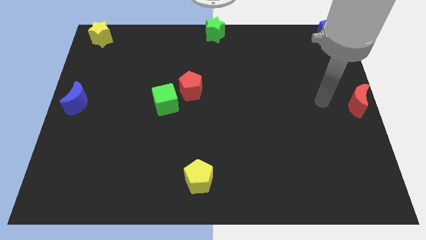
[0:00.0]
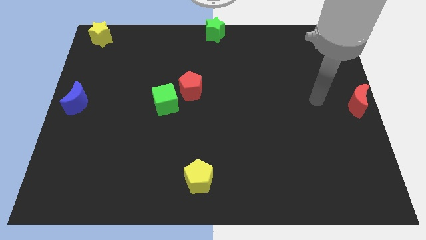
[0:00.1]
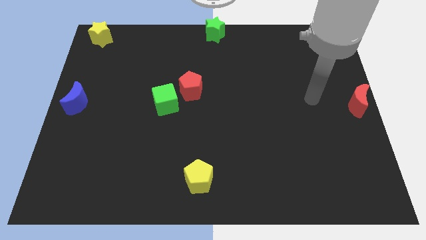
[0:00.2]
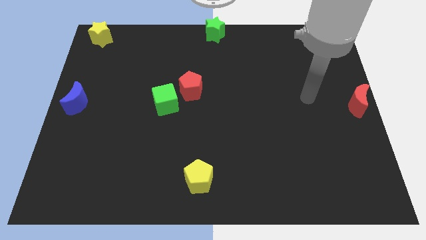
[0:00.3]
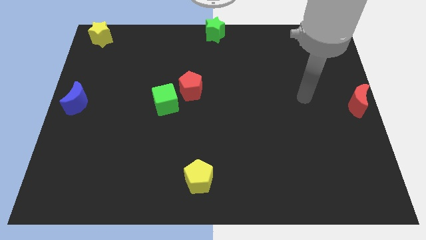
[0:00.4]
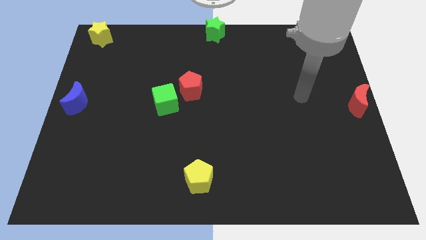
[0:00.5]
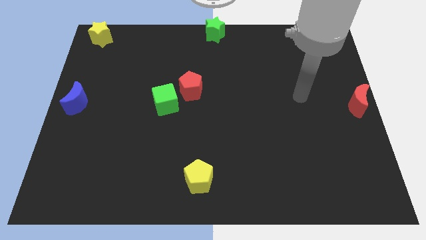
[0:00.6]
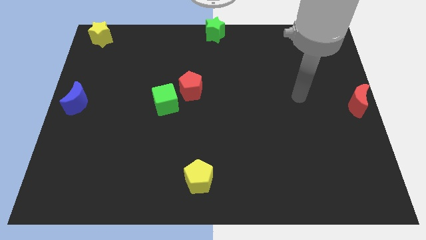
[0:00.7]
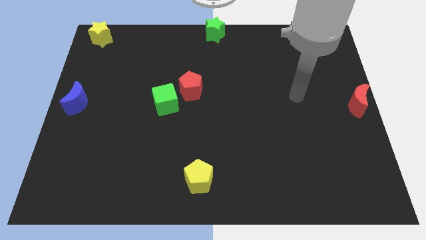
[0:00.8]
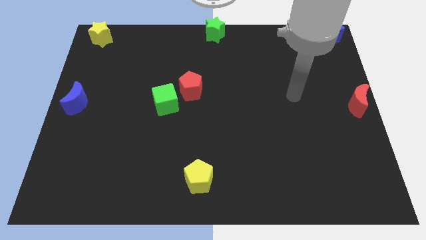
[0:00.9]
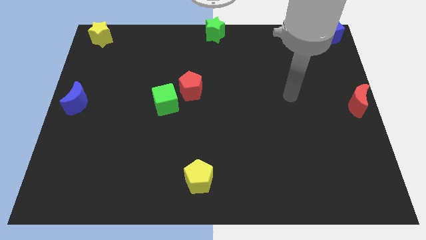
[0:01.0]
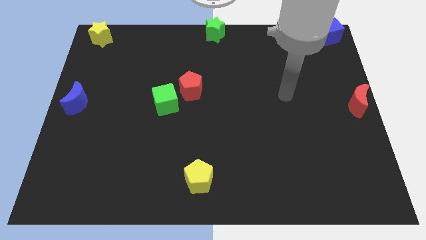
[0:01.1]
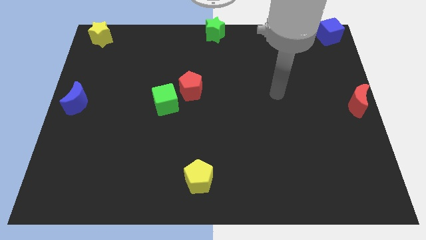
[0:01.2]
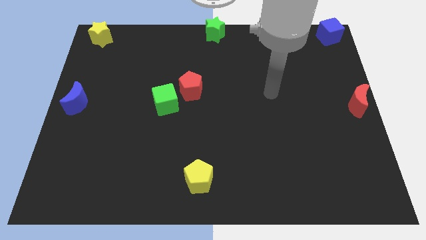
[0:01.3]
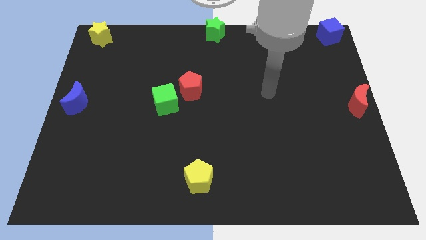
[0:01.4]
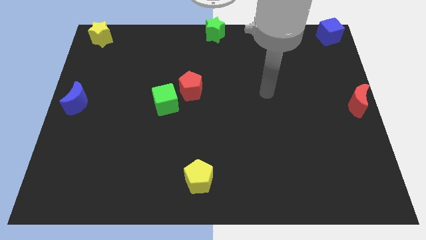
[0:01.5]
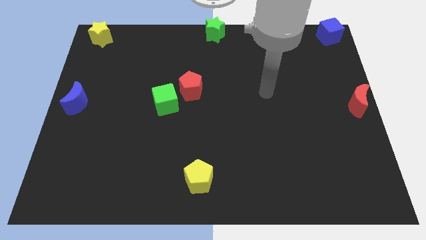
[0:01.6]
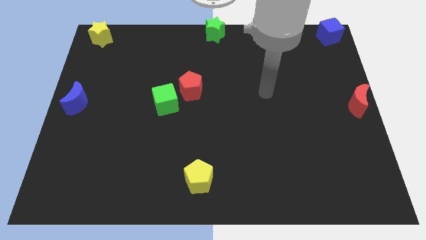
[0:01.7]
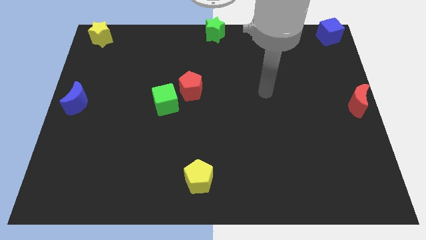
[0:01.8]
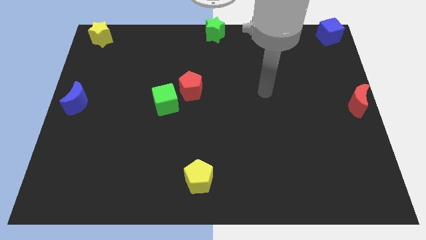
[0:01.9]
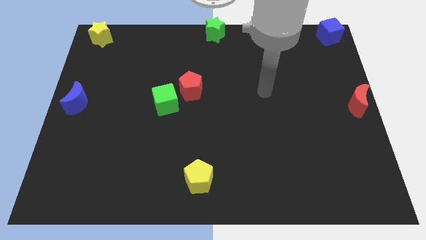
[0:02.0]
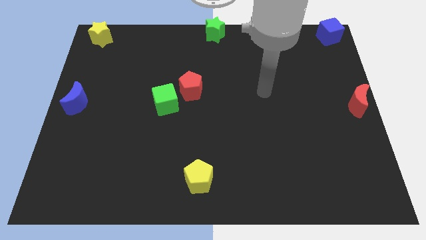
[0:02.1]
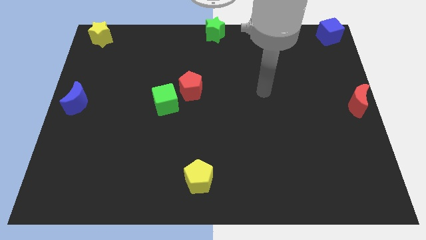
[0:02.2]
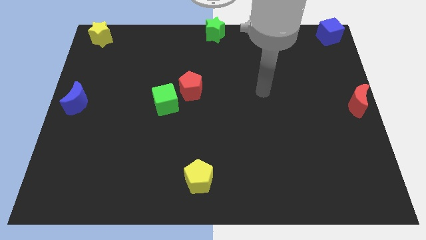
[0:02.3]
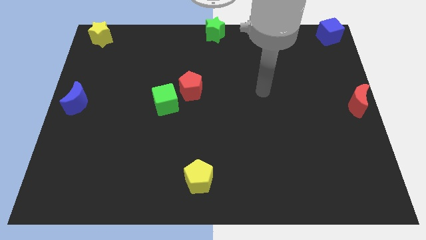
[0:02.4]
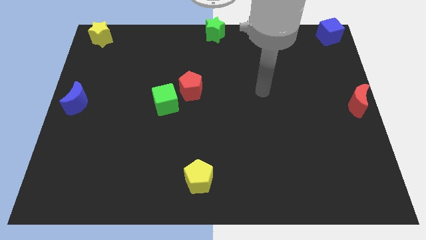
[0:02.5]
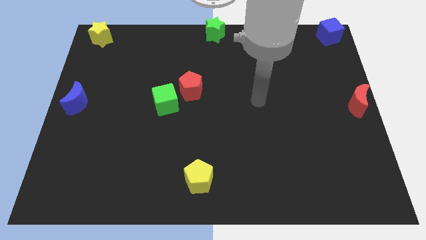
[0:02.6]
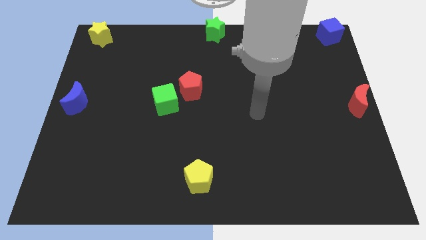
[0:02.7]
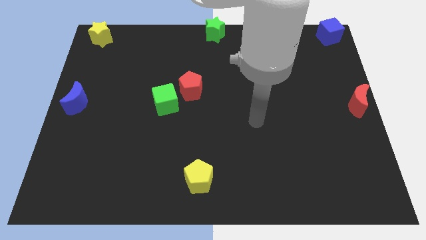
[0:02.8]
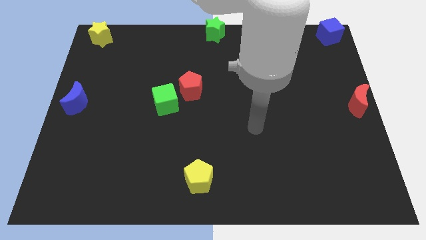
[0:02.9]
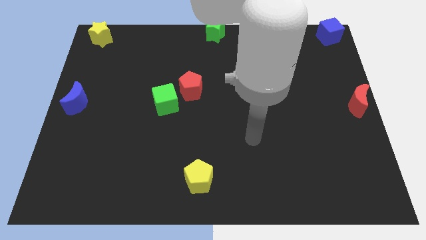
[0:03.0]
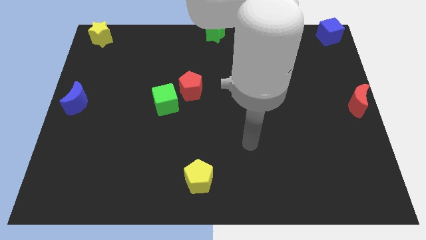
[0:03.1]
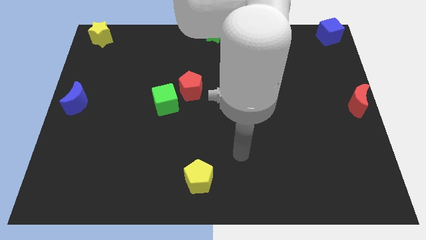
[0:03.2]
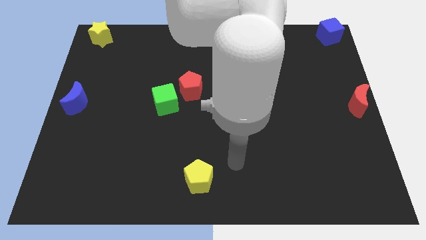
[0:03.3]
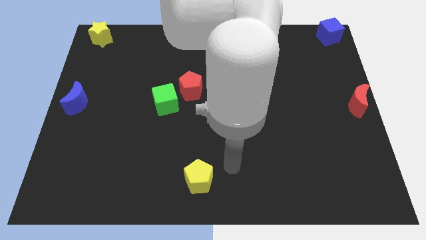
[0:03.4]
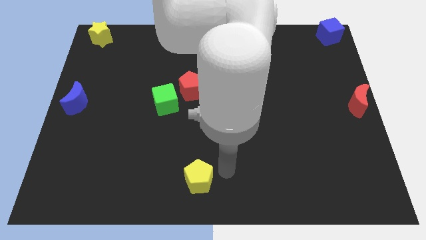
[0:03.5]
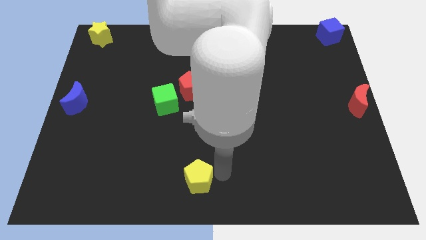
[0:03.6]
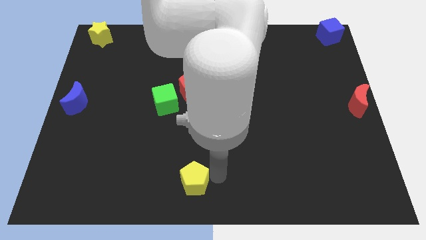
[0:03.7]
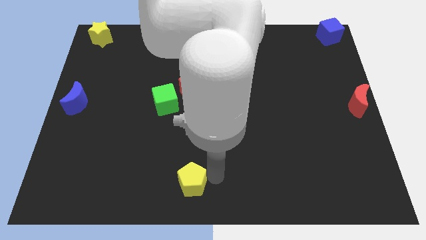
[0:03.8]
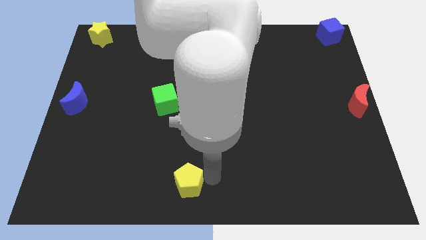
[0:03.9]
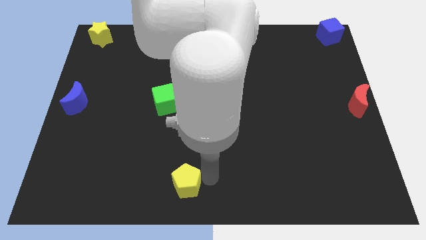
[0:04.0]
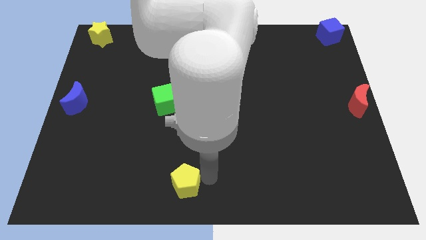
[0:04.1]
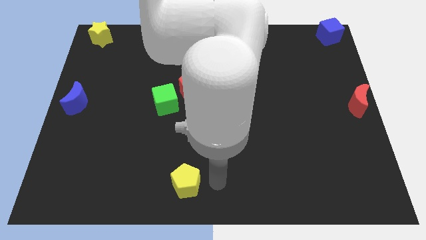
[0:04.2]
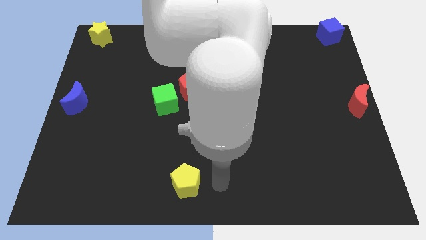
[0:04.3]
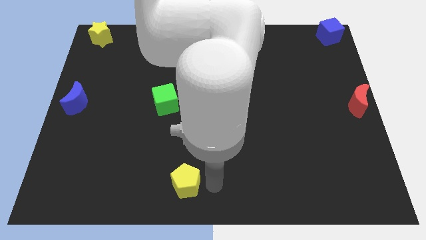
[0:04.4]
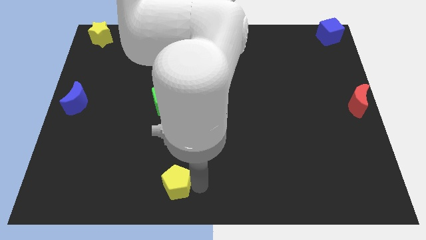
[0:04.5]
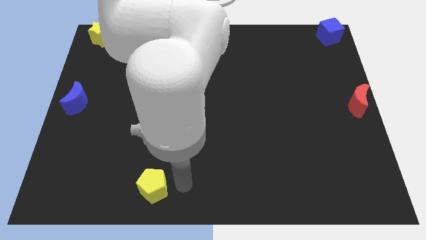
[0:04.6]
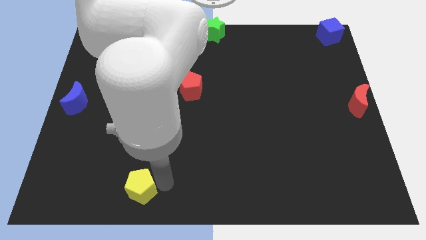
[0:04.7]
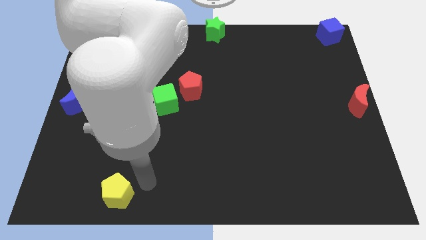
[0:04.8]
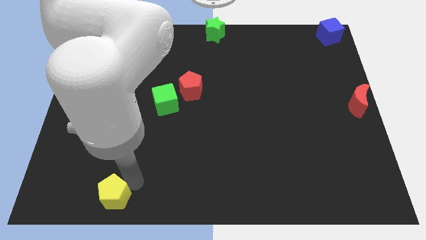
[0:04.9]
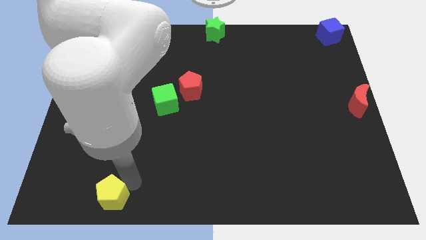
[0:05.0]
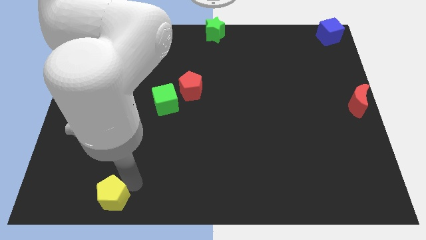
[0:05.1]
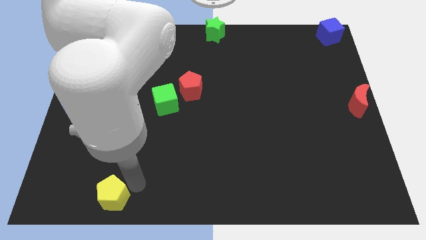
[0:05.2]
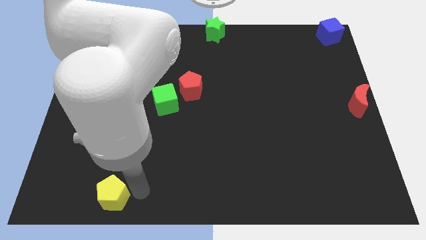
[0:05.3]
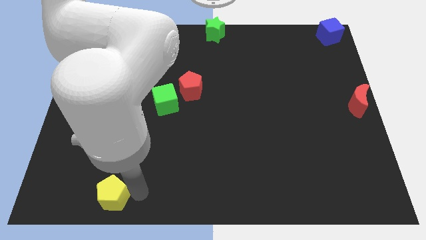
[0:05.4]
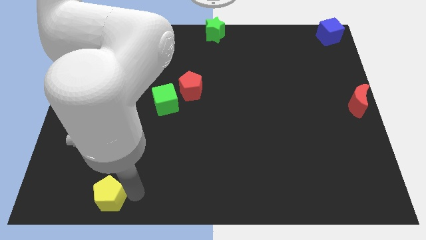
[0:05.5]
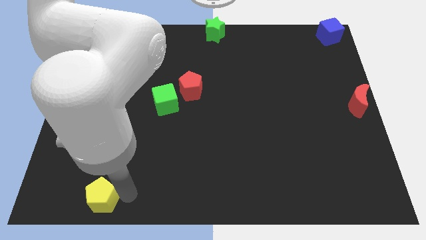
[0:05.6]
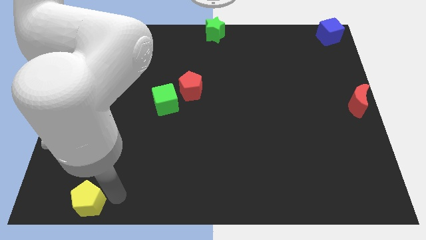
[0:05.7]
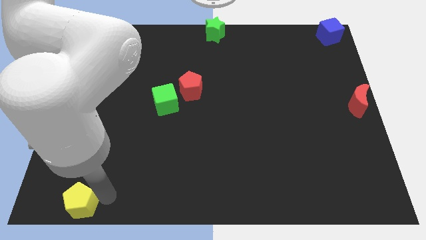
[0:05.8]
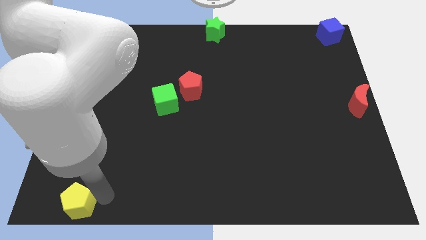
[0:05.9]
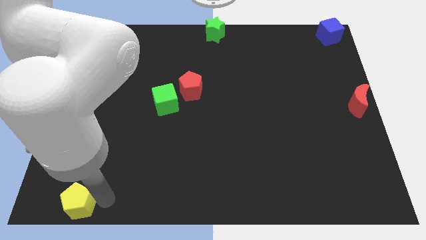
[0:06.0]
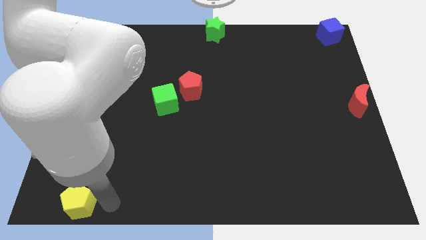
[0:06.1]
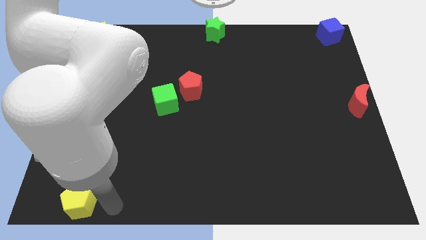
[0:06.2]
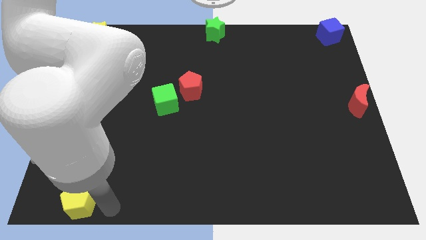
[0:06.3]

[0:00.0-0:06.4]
slide the yellow pentagon towards the bottom left

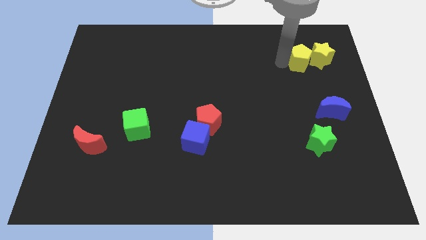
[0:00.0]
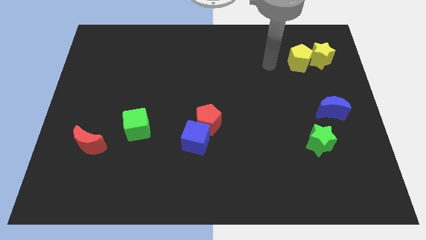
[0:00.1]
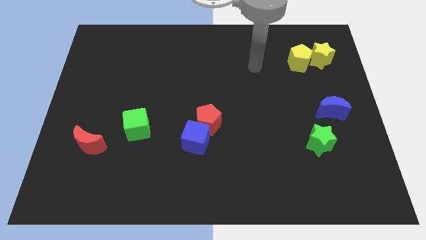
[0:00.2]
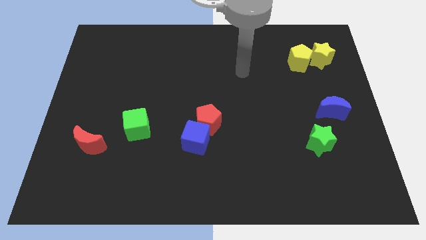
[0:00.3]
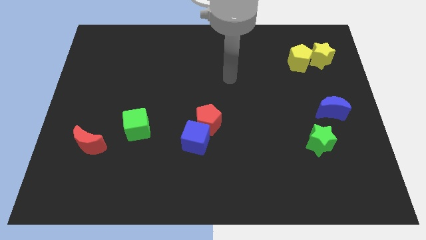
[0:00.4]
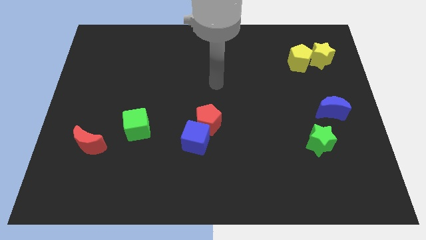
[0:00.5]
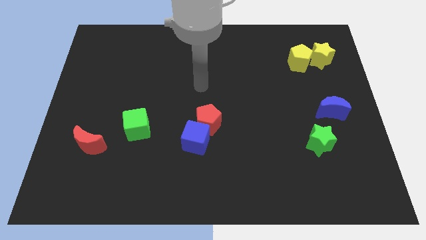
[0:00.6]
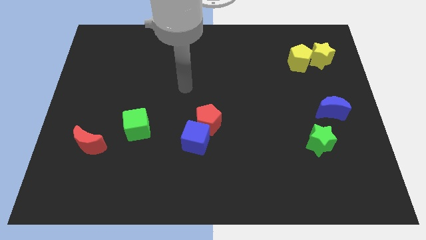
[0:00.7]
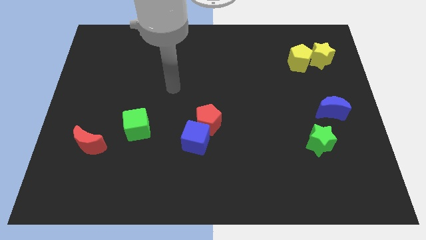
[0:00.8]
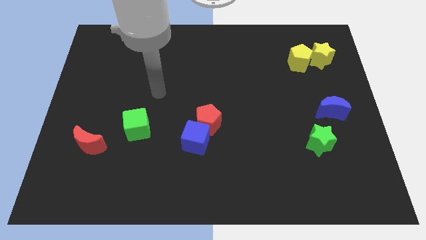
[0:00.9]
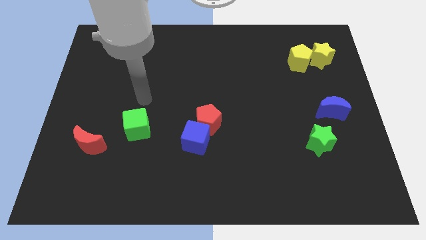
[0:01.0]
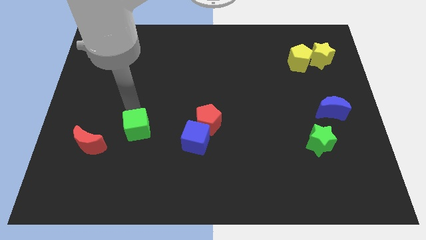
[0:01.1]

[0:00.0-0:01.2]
point your arm to the top of the green cube

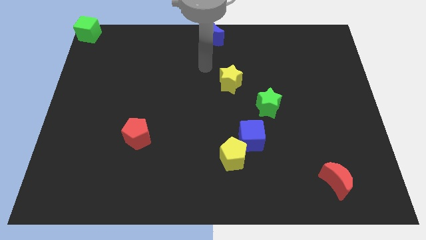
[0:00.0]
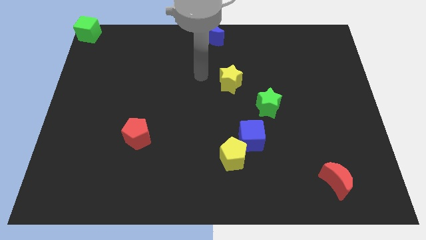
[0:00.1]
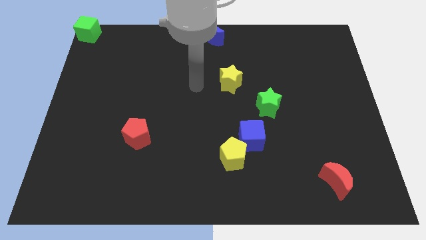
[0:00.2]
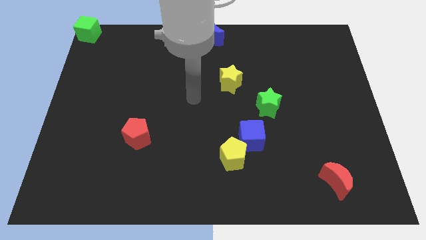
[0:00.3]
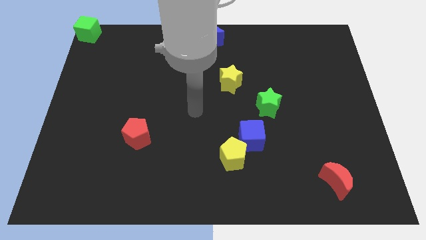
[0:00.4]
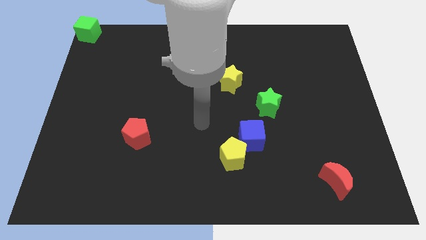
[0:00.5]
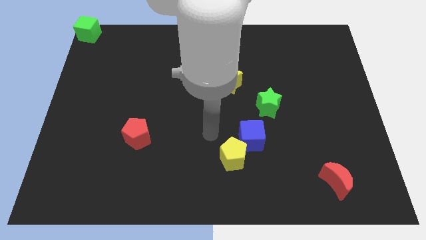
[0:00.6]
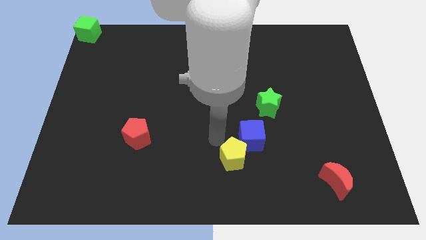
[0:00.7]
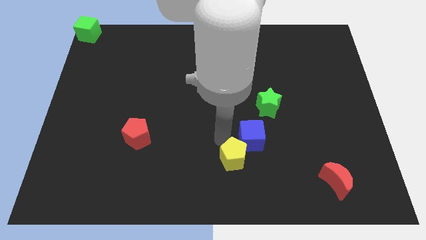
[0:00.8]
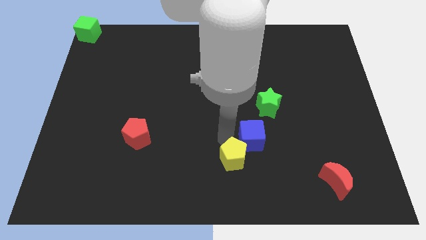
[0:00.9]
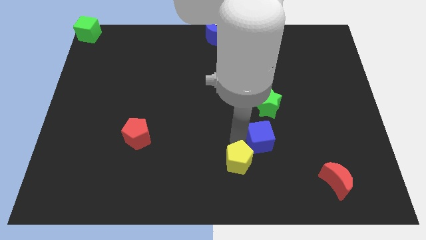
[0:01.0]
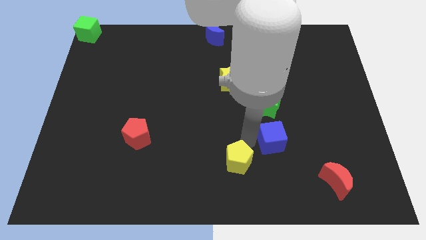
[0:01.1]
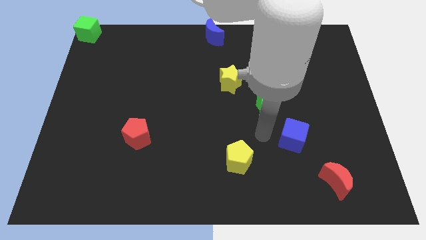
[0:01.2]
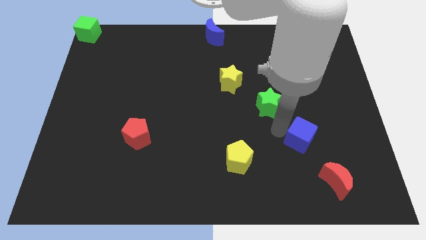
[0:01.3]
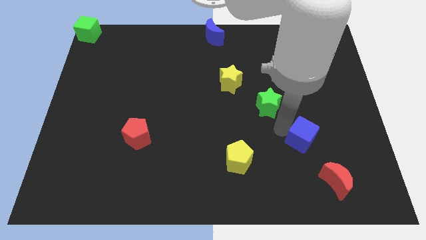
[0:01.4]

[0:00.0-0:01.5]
separate the blue cube from the yellow pentagon
